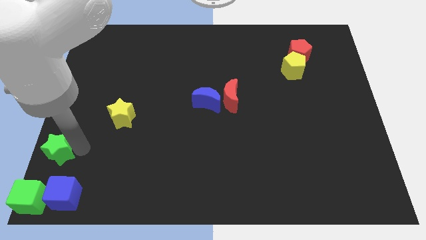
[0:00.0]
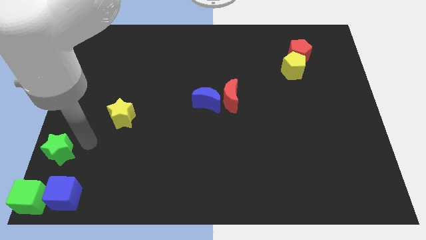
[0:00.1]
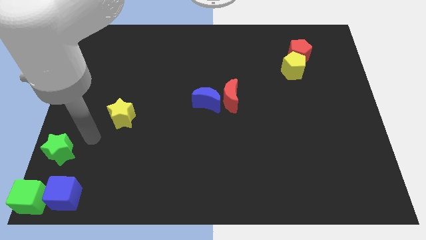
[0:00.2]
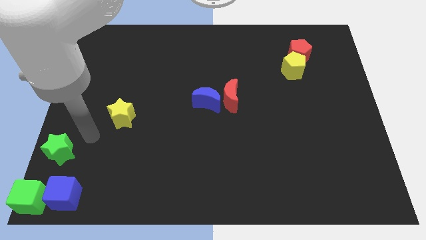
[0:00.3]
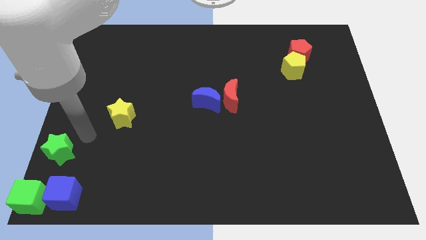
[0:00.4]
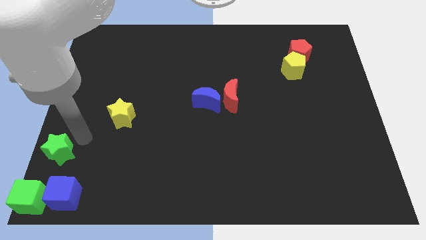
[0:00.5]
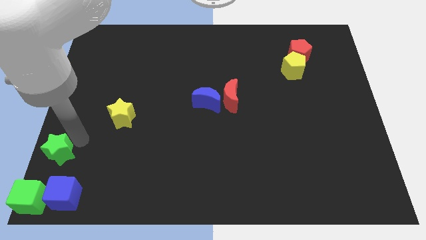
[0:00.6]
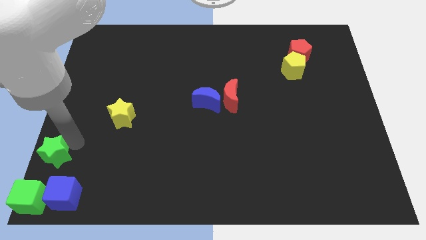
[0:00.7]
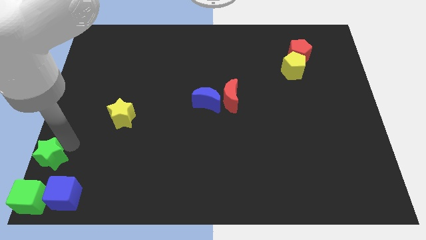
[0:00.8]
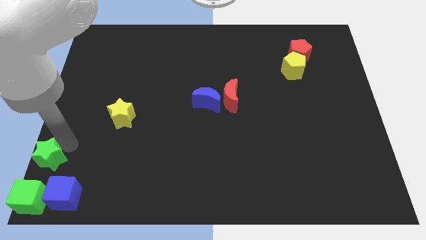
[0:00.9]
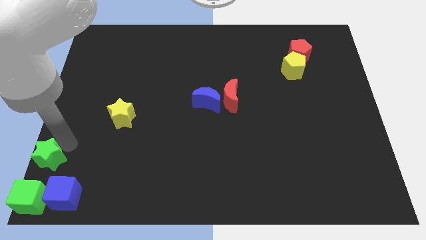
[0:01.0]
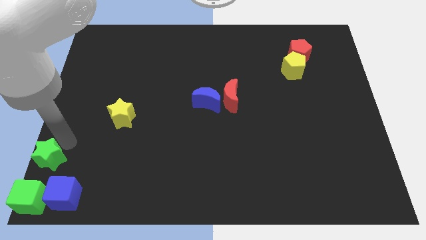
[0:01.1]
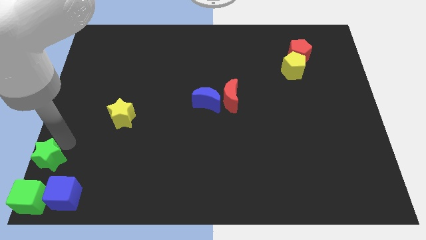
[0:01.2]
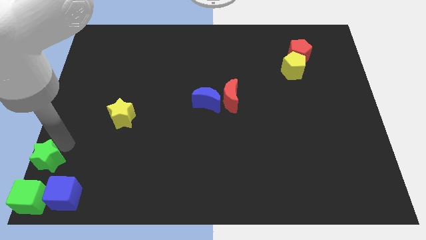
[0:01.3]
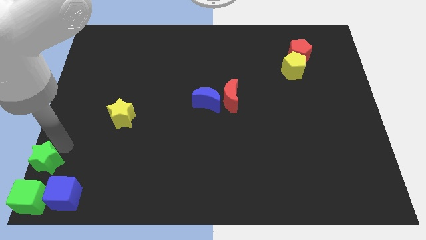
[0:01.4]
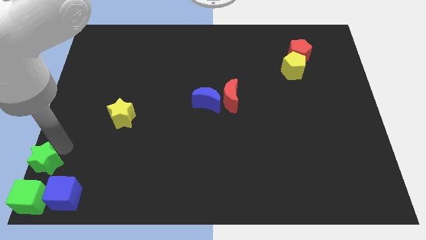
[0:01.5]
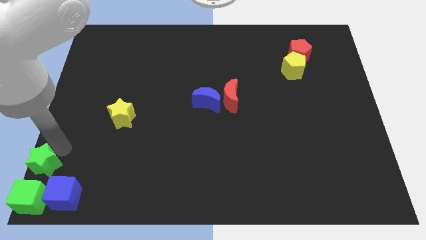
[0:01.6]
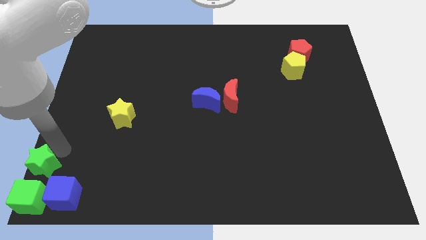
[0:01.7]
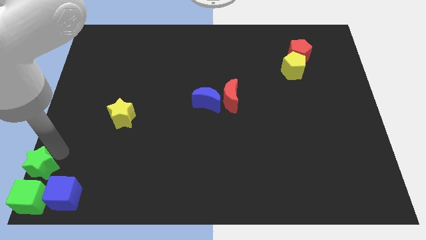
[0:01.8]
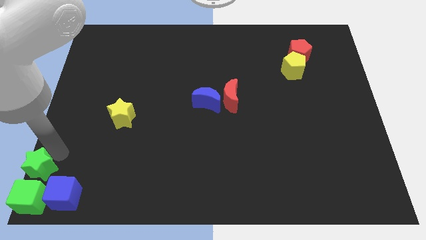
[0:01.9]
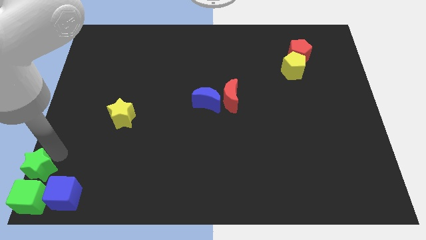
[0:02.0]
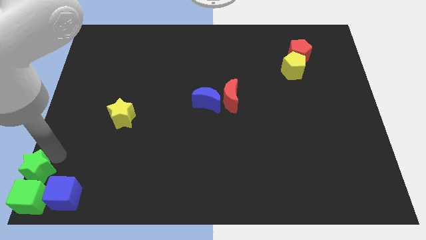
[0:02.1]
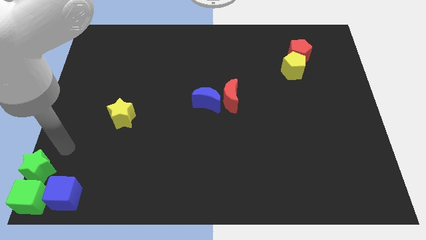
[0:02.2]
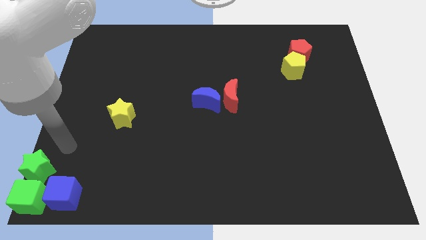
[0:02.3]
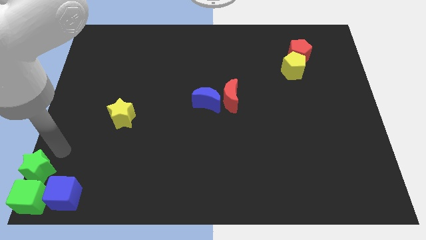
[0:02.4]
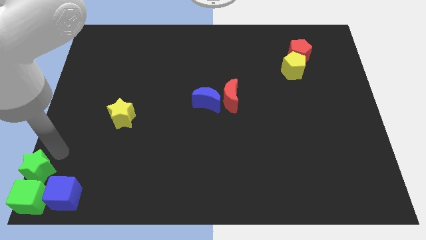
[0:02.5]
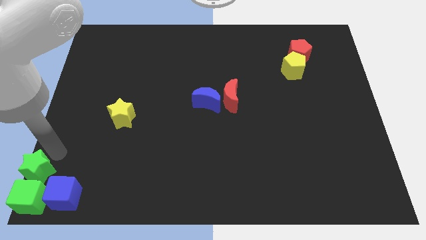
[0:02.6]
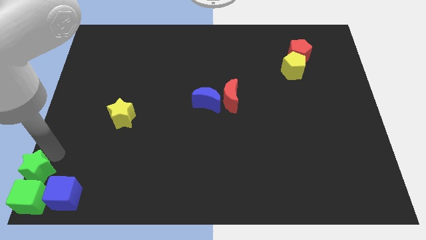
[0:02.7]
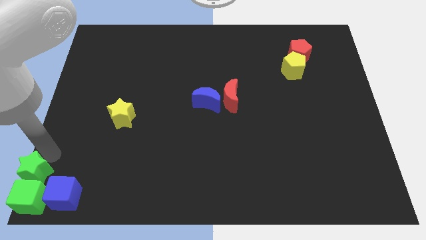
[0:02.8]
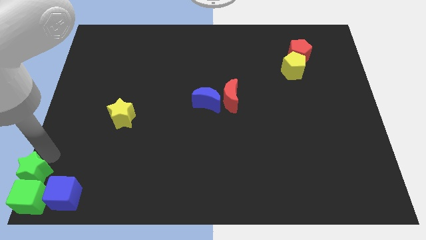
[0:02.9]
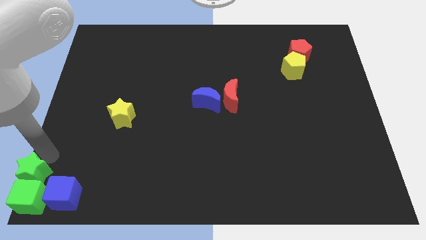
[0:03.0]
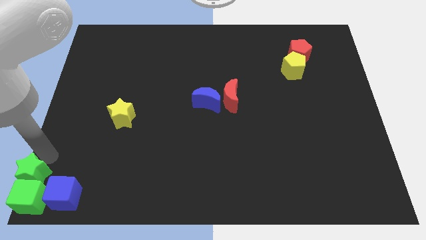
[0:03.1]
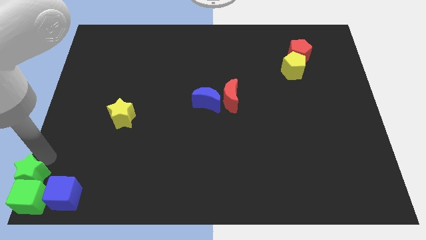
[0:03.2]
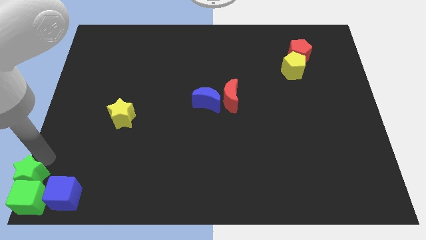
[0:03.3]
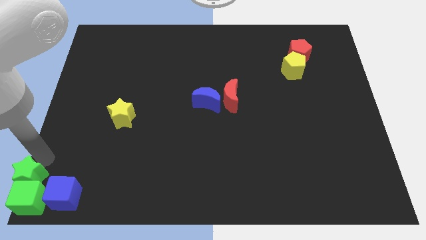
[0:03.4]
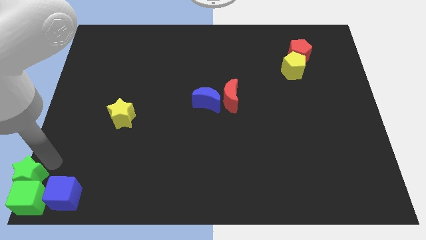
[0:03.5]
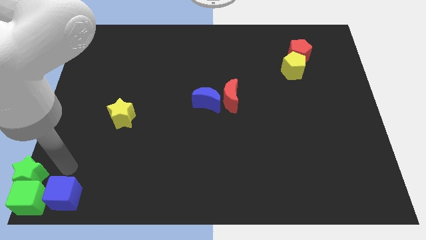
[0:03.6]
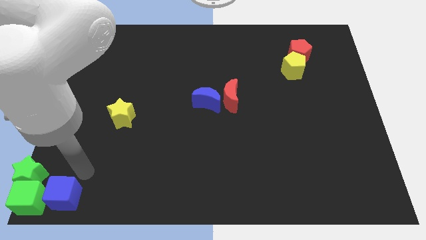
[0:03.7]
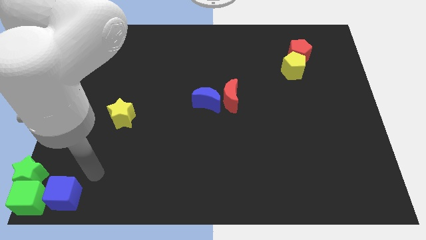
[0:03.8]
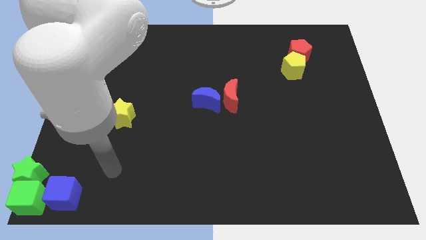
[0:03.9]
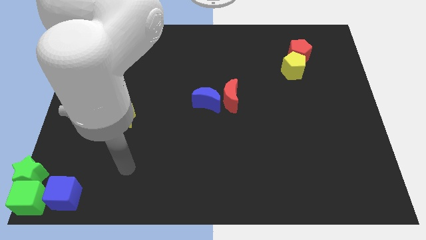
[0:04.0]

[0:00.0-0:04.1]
push green star in to green cube

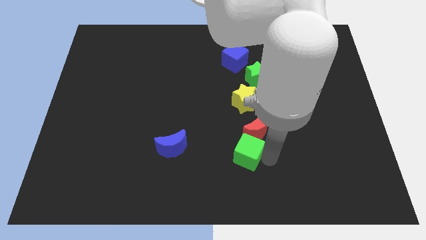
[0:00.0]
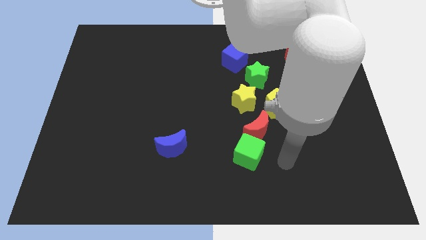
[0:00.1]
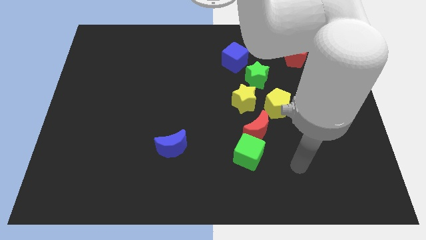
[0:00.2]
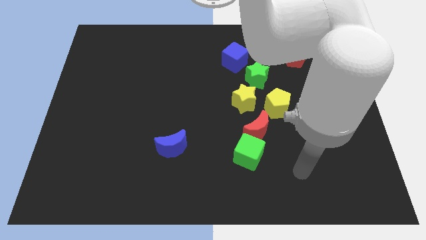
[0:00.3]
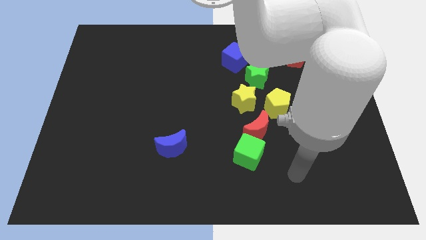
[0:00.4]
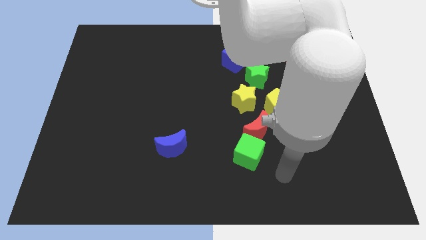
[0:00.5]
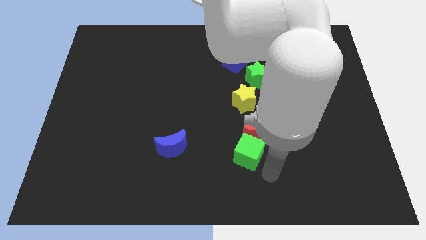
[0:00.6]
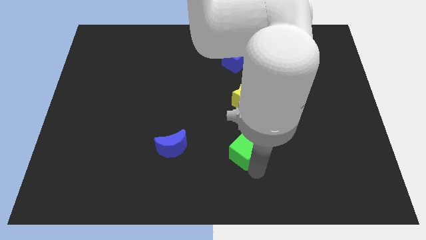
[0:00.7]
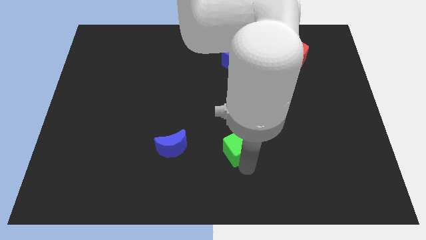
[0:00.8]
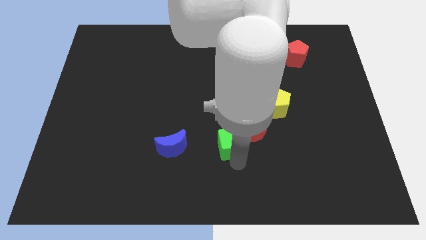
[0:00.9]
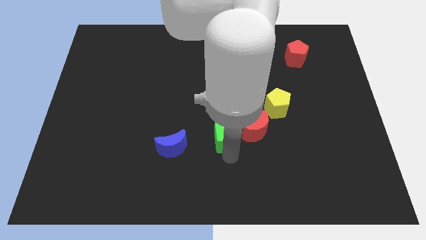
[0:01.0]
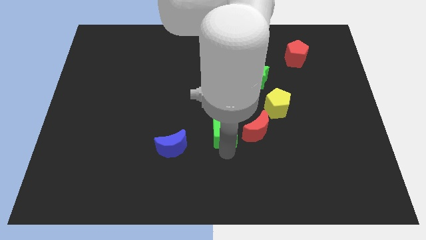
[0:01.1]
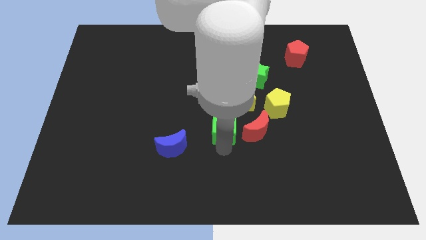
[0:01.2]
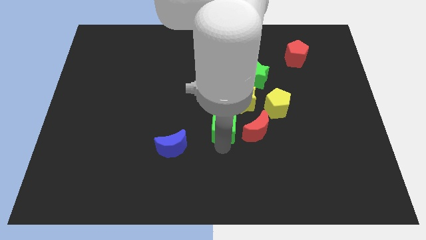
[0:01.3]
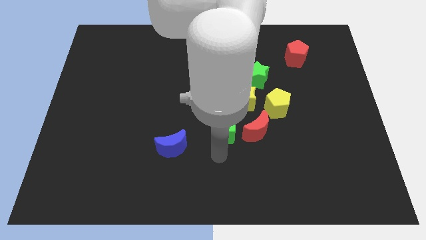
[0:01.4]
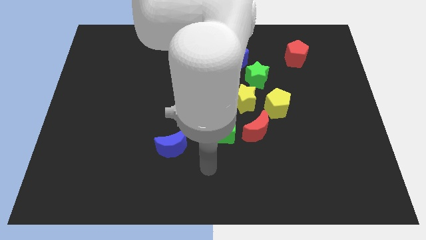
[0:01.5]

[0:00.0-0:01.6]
move the green cube to the left of the red crescent

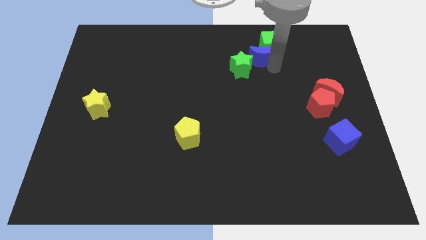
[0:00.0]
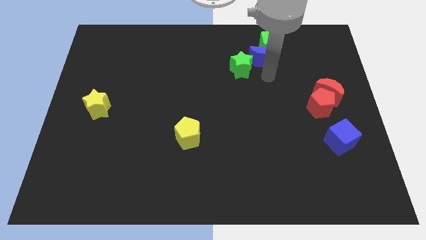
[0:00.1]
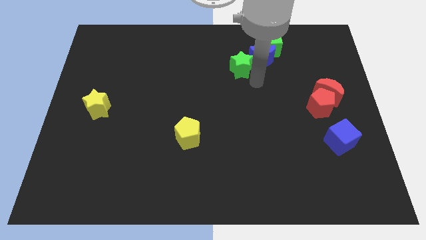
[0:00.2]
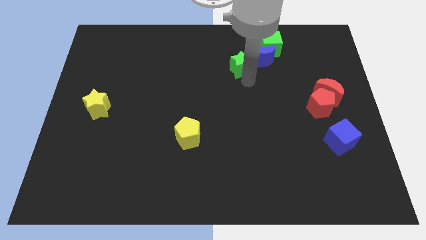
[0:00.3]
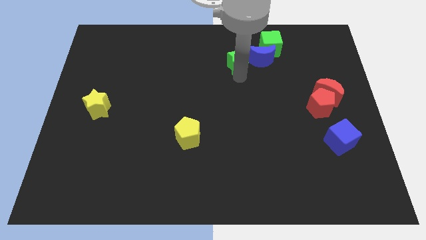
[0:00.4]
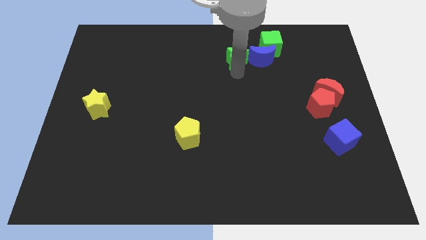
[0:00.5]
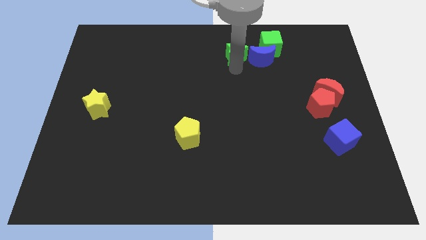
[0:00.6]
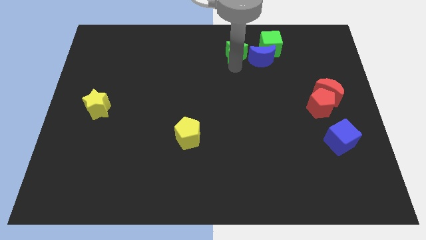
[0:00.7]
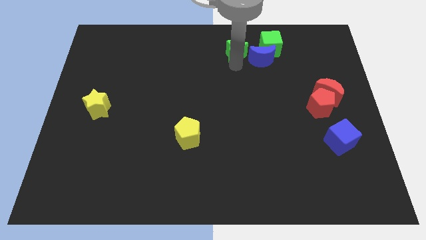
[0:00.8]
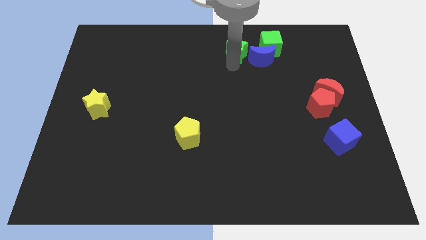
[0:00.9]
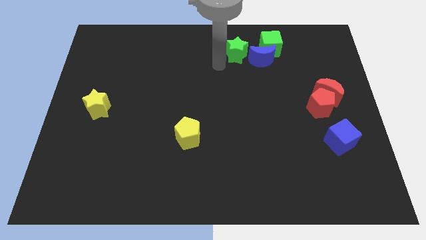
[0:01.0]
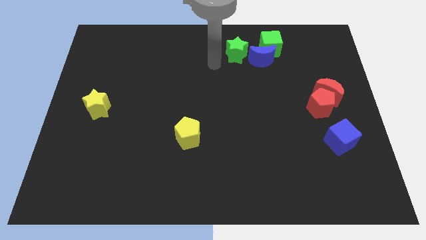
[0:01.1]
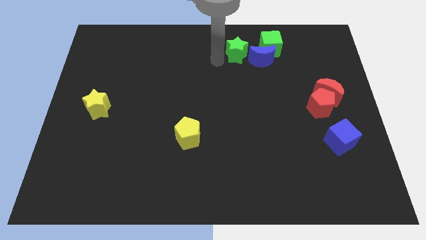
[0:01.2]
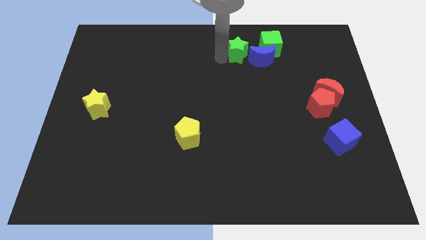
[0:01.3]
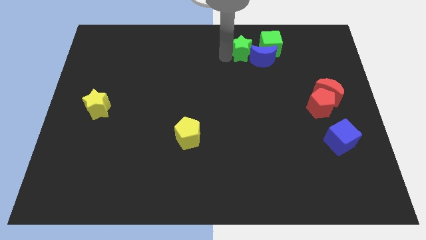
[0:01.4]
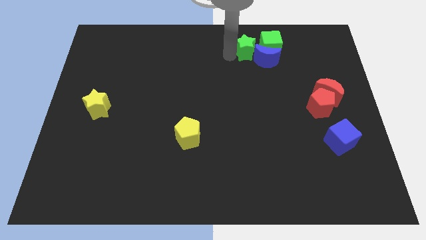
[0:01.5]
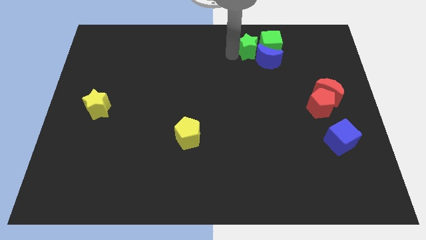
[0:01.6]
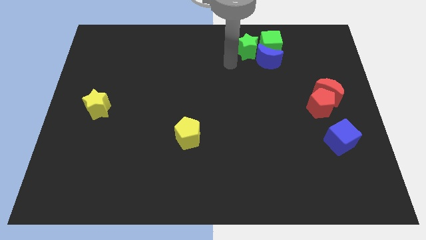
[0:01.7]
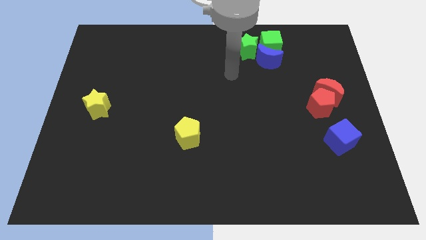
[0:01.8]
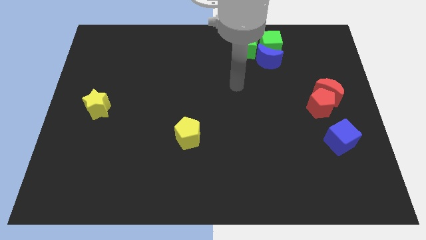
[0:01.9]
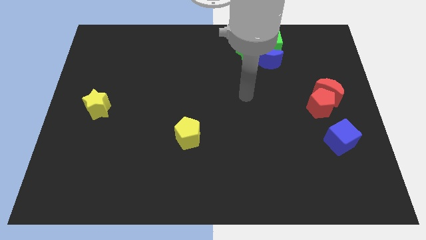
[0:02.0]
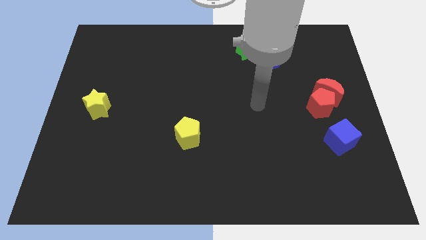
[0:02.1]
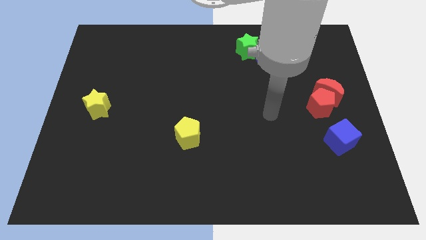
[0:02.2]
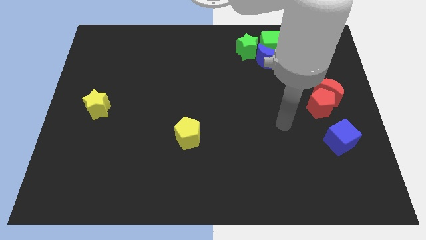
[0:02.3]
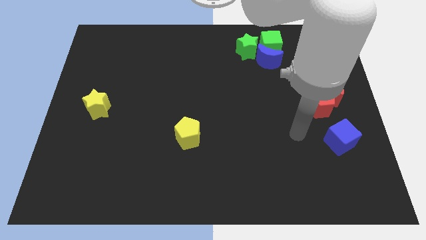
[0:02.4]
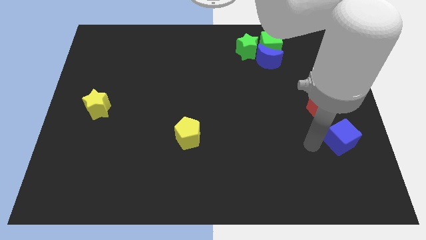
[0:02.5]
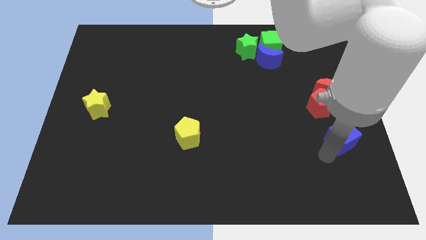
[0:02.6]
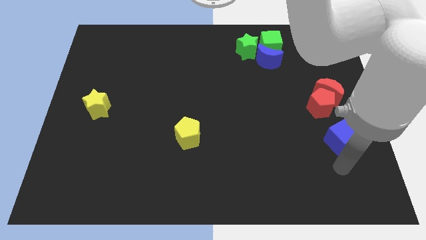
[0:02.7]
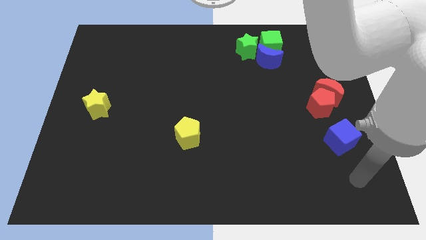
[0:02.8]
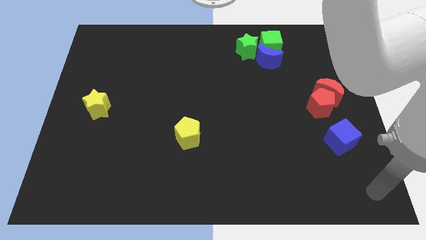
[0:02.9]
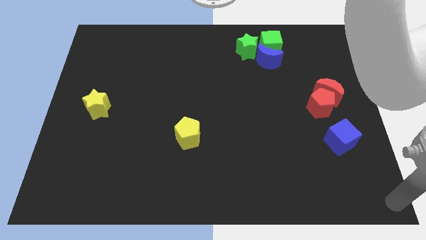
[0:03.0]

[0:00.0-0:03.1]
place the green star left to the green square

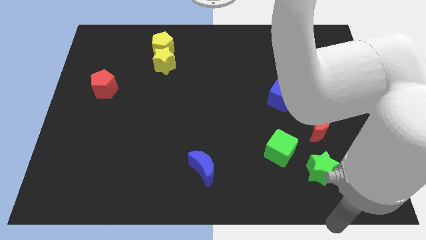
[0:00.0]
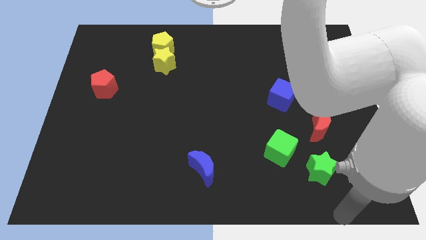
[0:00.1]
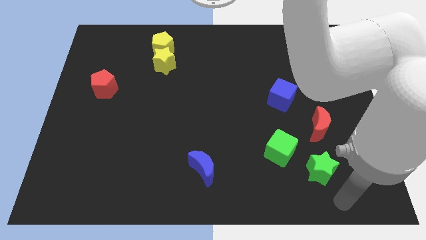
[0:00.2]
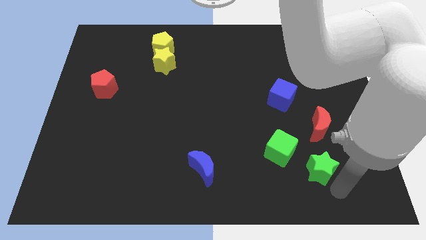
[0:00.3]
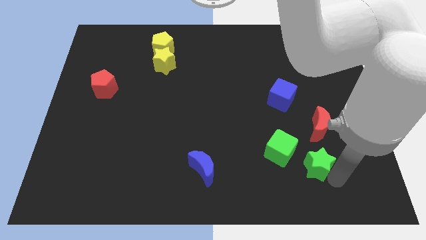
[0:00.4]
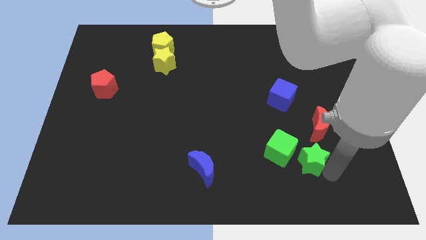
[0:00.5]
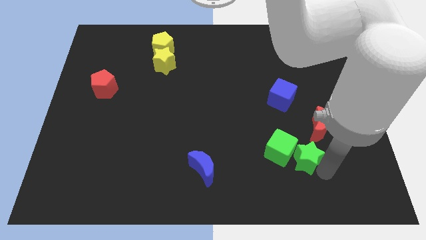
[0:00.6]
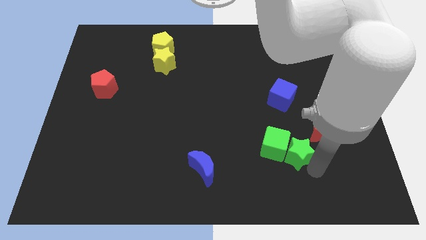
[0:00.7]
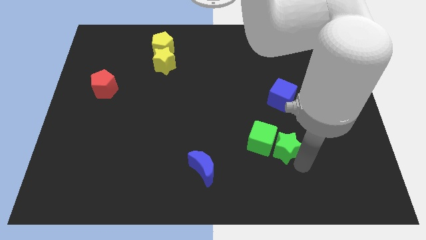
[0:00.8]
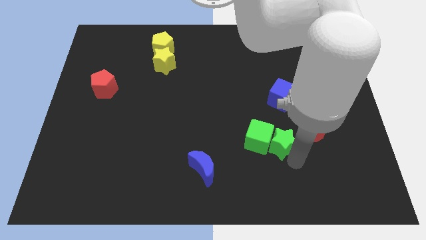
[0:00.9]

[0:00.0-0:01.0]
push the green star into the green cube
